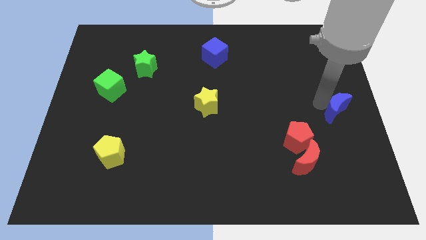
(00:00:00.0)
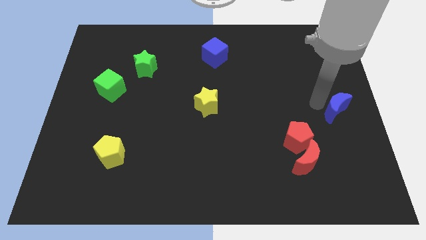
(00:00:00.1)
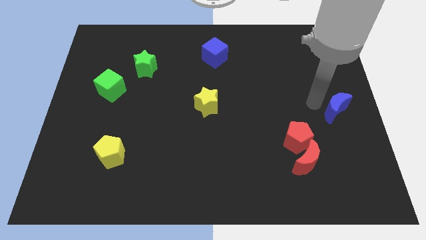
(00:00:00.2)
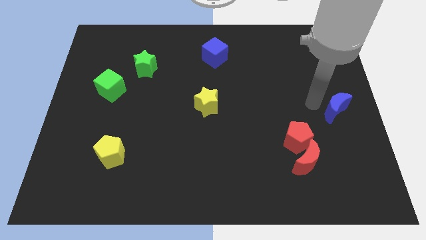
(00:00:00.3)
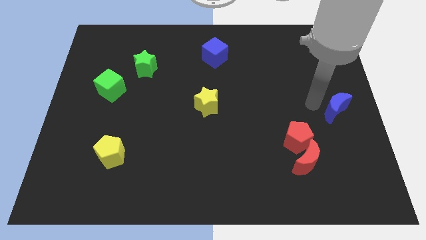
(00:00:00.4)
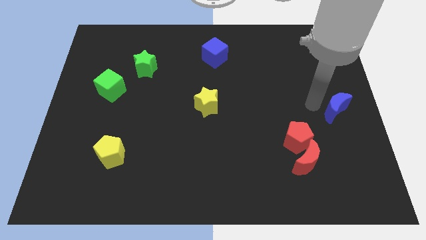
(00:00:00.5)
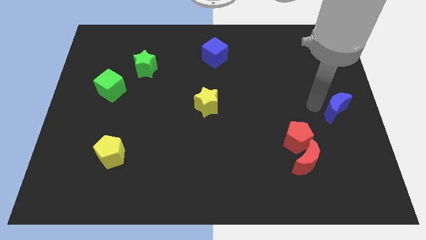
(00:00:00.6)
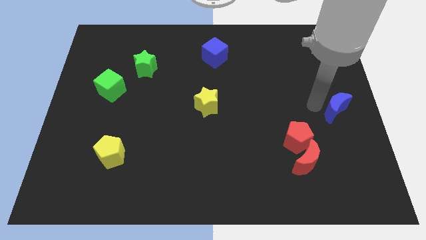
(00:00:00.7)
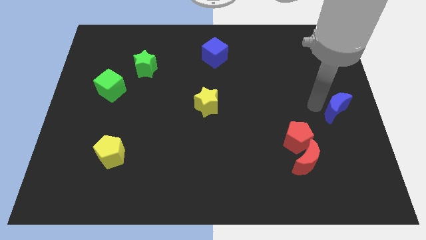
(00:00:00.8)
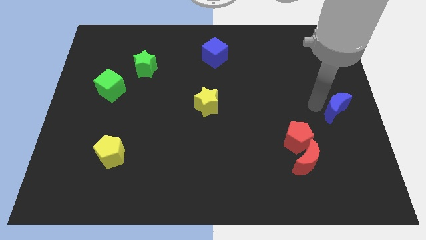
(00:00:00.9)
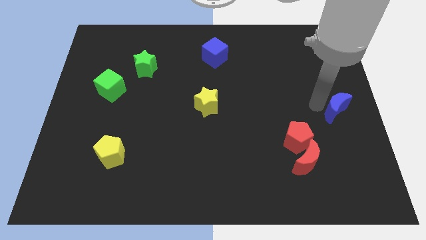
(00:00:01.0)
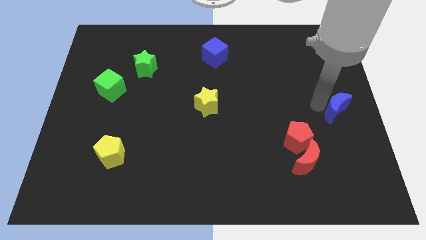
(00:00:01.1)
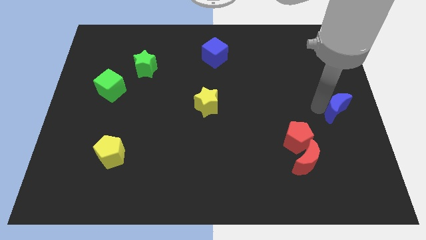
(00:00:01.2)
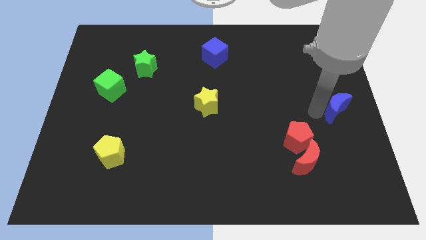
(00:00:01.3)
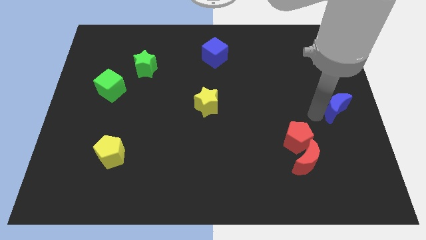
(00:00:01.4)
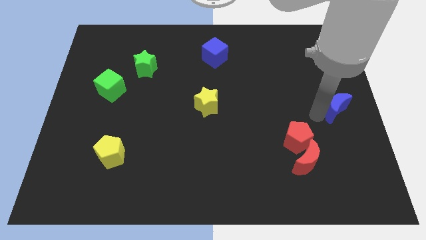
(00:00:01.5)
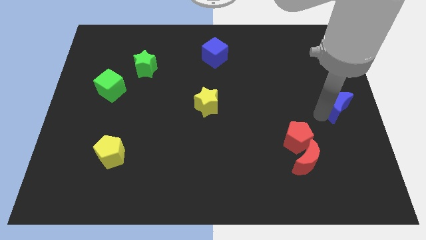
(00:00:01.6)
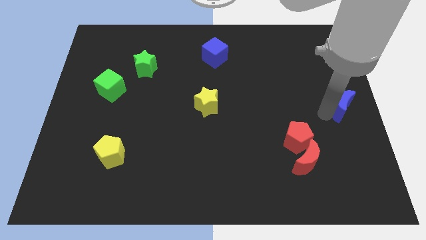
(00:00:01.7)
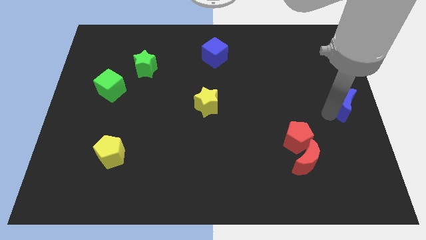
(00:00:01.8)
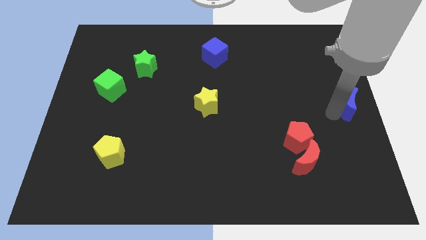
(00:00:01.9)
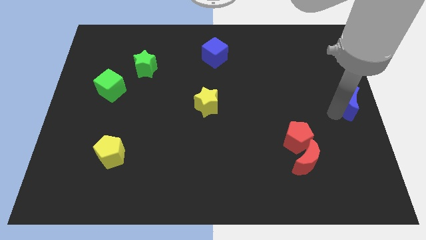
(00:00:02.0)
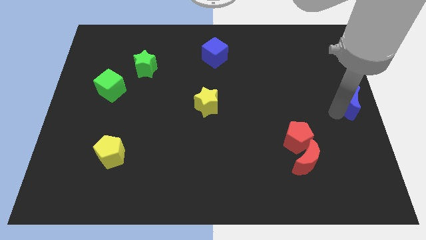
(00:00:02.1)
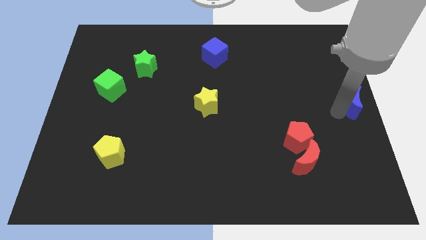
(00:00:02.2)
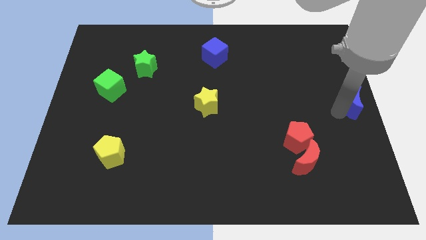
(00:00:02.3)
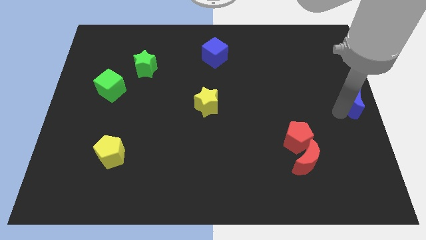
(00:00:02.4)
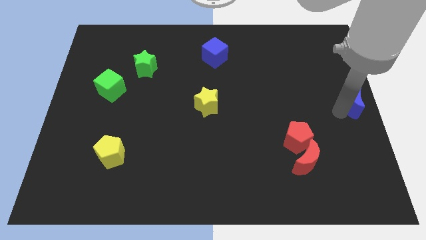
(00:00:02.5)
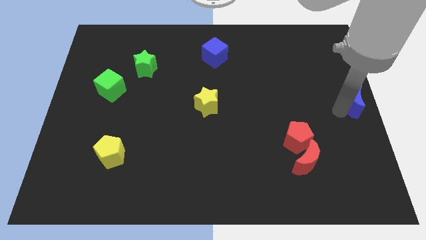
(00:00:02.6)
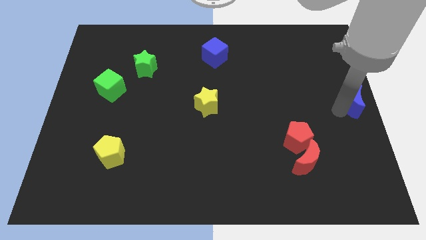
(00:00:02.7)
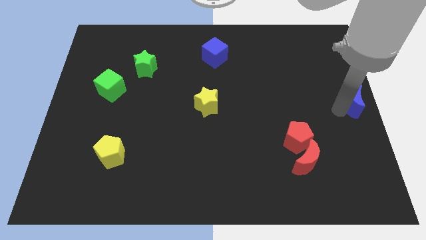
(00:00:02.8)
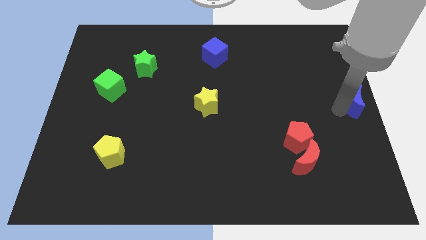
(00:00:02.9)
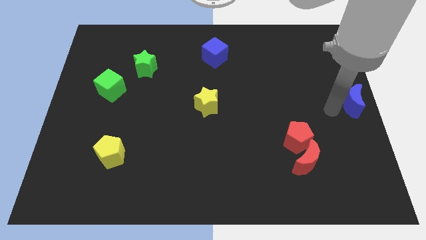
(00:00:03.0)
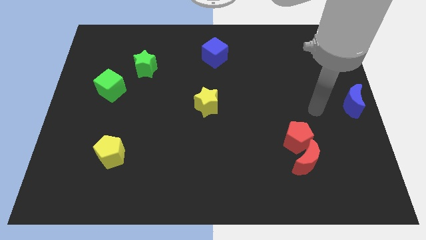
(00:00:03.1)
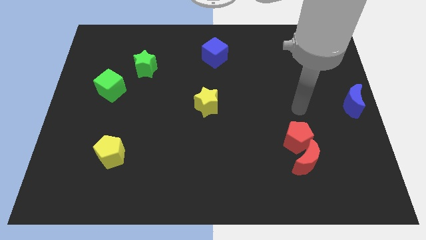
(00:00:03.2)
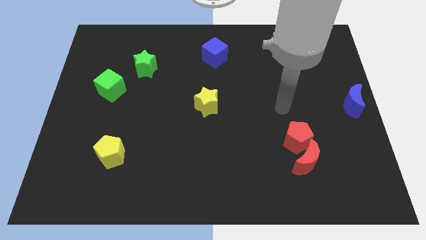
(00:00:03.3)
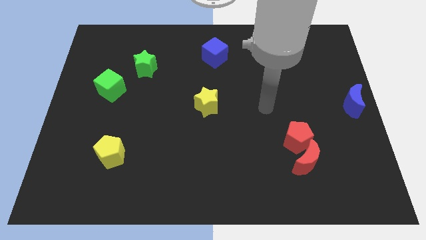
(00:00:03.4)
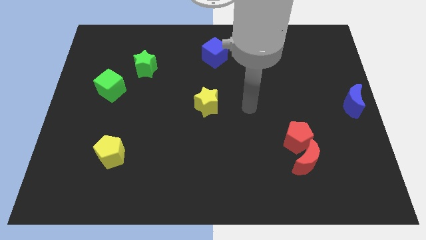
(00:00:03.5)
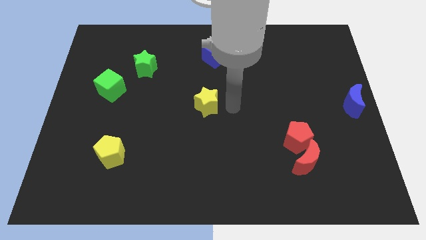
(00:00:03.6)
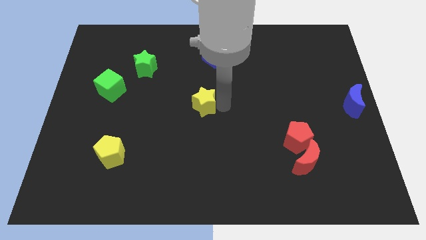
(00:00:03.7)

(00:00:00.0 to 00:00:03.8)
push the blue moon at the center right side

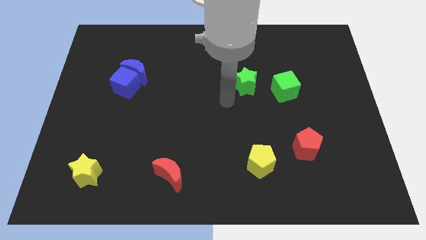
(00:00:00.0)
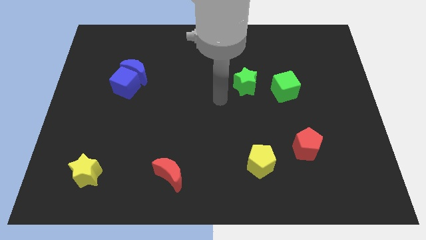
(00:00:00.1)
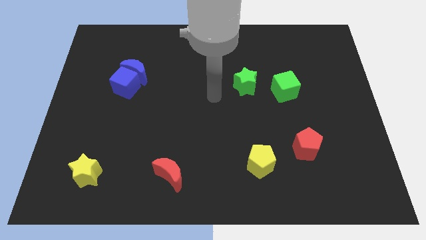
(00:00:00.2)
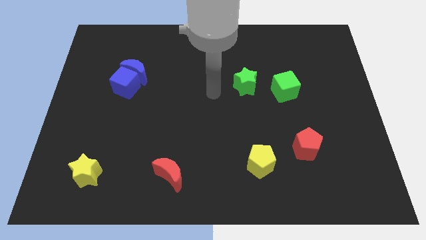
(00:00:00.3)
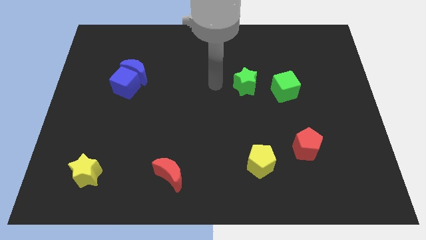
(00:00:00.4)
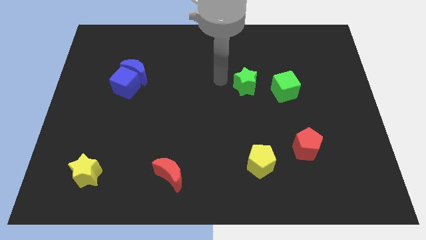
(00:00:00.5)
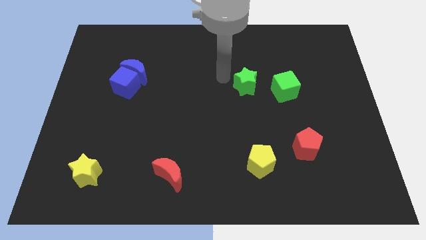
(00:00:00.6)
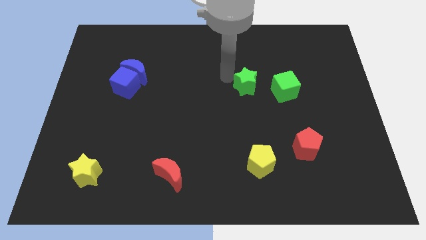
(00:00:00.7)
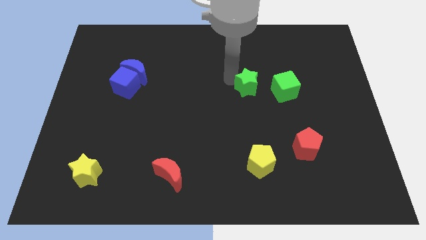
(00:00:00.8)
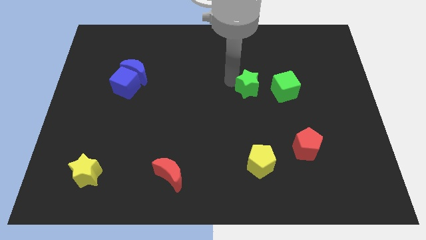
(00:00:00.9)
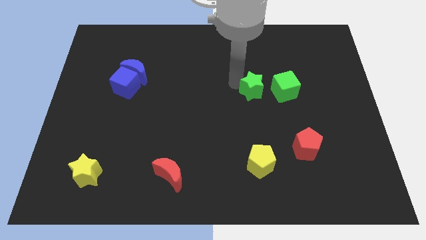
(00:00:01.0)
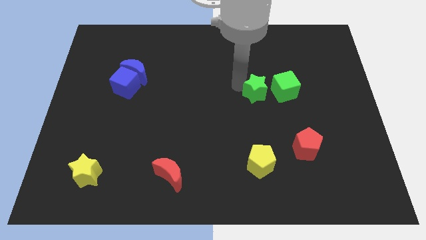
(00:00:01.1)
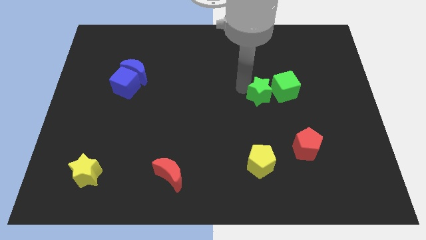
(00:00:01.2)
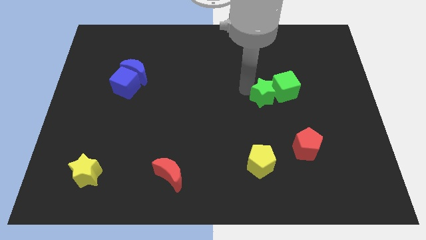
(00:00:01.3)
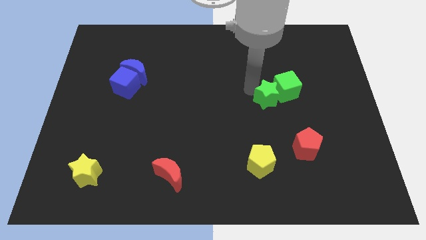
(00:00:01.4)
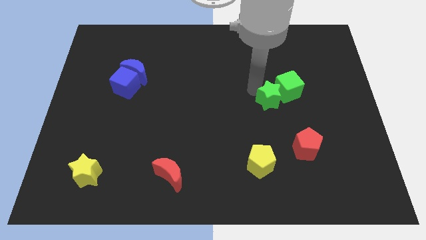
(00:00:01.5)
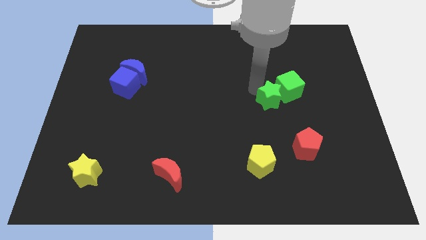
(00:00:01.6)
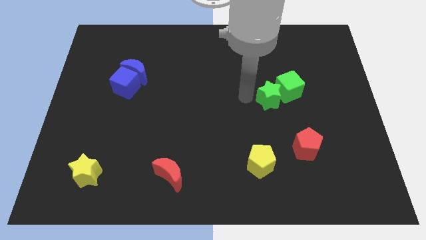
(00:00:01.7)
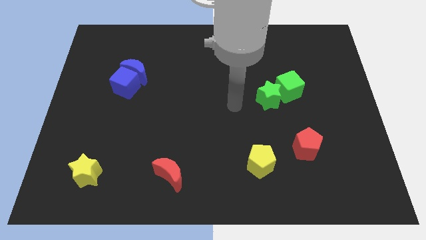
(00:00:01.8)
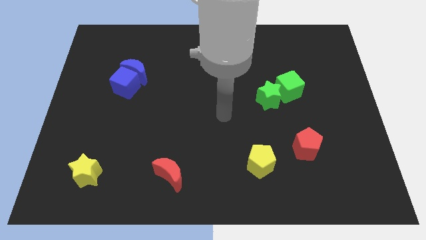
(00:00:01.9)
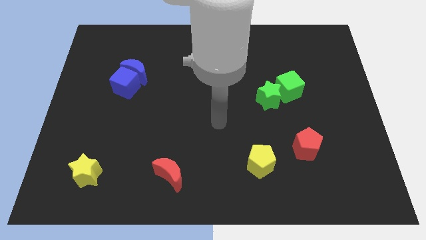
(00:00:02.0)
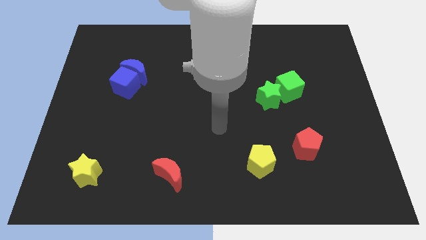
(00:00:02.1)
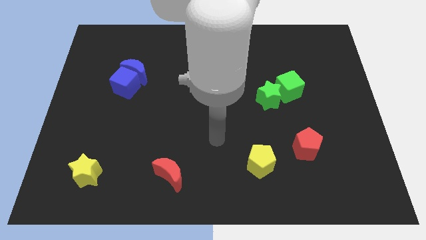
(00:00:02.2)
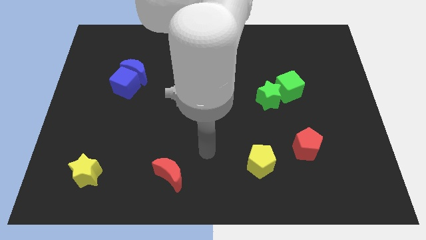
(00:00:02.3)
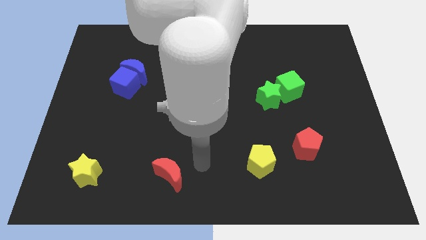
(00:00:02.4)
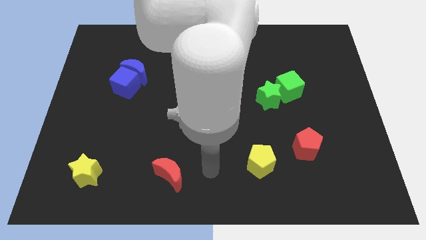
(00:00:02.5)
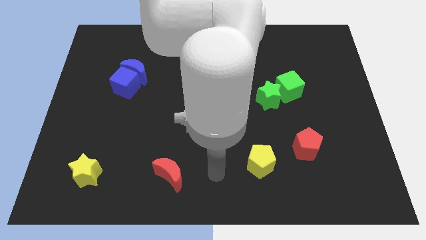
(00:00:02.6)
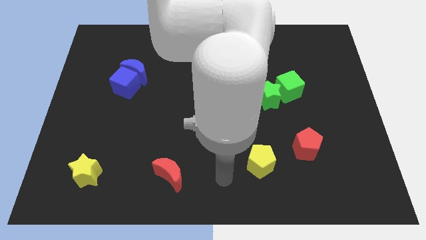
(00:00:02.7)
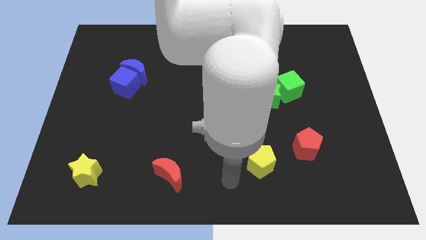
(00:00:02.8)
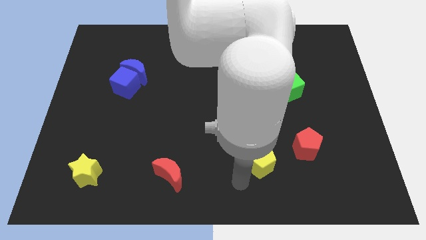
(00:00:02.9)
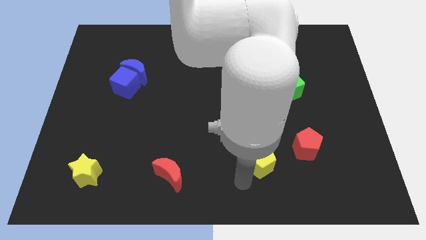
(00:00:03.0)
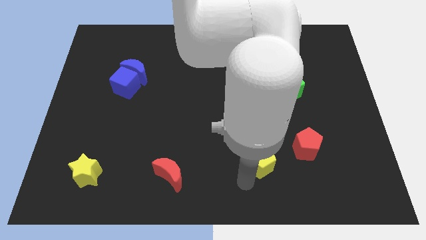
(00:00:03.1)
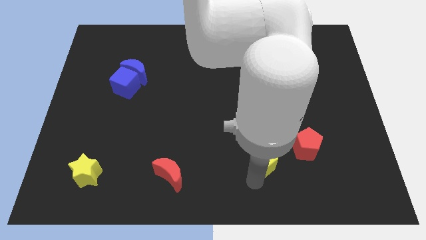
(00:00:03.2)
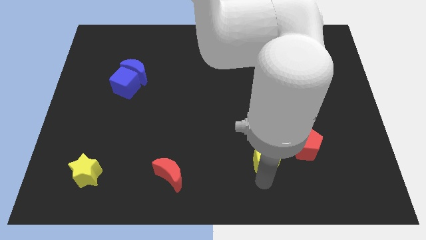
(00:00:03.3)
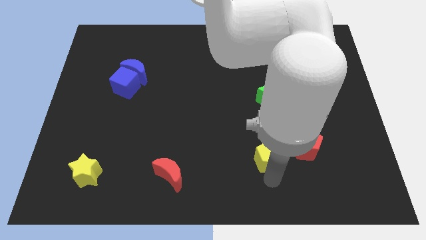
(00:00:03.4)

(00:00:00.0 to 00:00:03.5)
place your arm below yellow pentagon

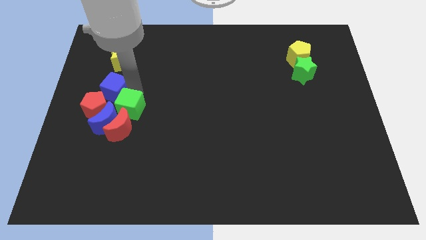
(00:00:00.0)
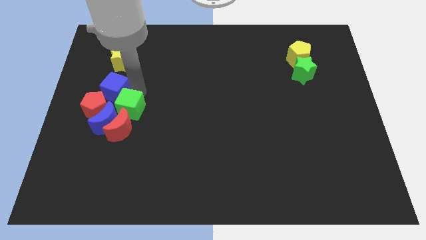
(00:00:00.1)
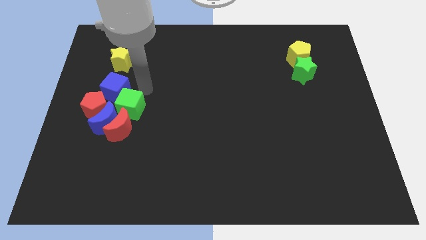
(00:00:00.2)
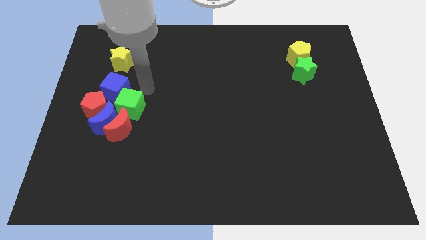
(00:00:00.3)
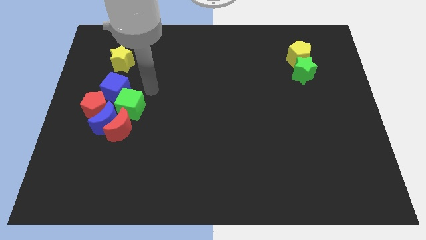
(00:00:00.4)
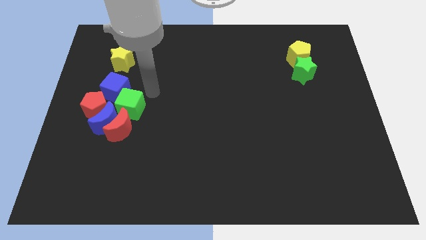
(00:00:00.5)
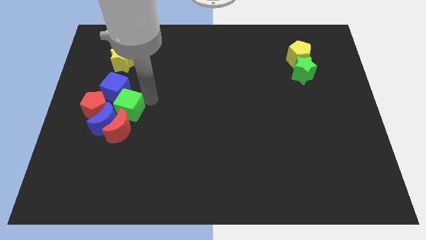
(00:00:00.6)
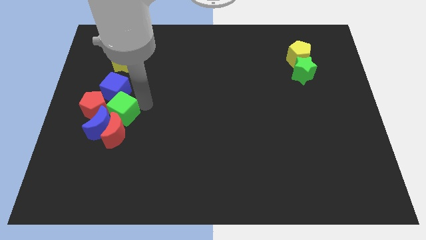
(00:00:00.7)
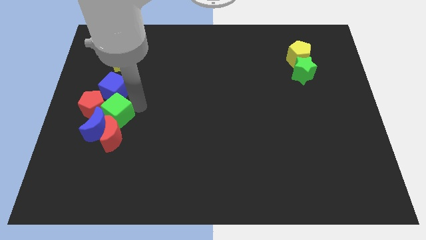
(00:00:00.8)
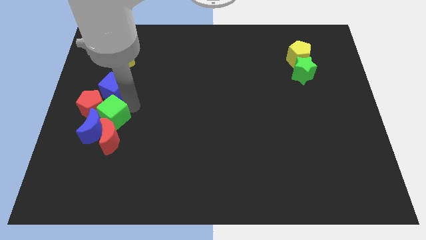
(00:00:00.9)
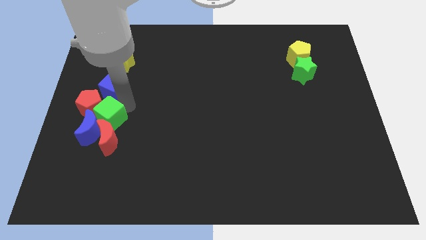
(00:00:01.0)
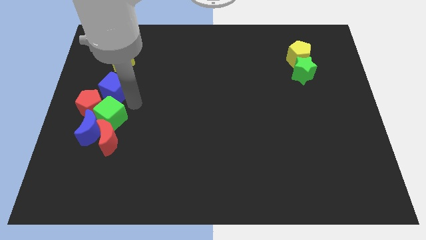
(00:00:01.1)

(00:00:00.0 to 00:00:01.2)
push the green cube along with the blue crescent slightly to the bottom

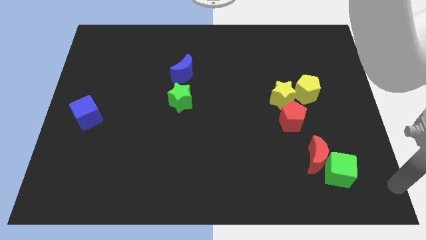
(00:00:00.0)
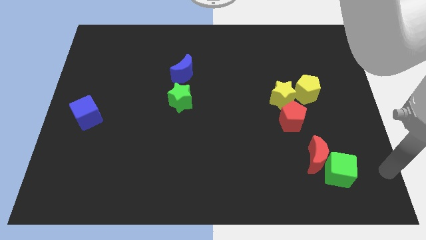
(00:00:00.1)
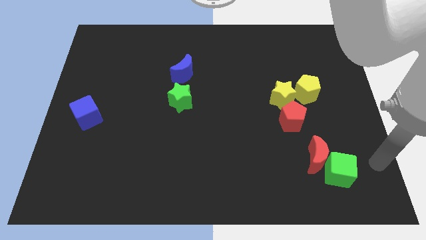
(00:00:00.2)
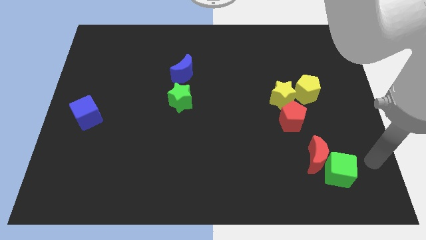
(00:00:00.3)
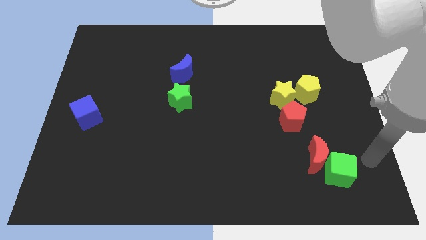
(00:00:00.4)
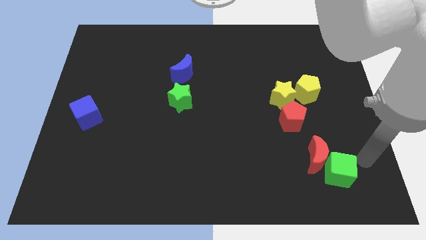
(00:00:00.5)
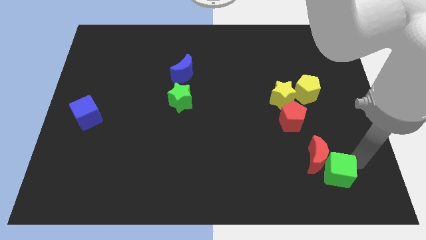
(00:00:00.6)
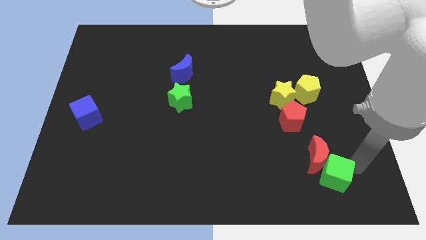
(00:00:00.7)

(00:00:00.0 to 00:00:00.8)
touch your arm to the right of the green cube
